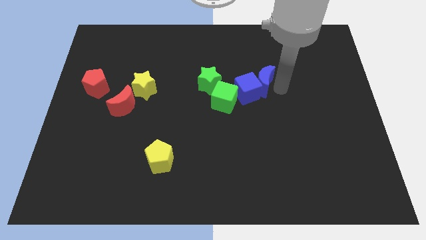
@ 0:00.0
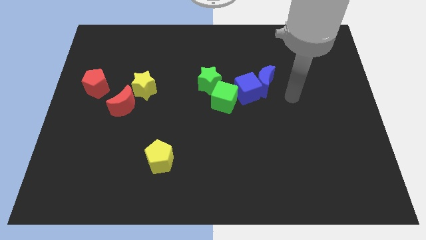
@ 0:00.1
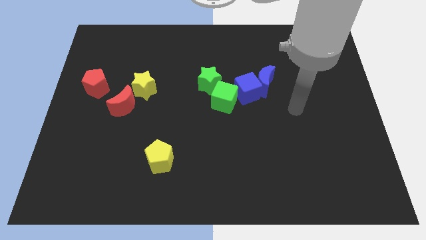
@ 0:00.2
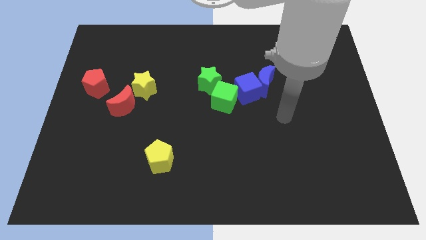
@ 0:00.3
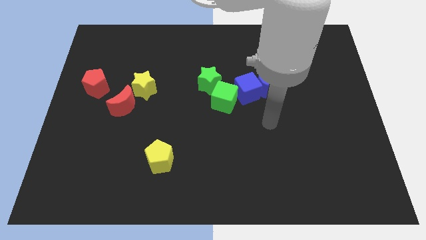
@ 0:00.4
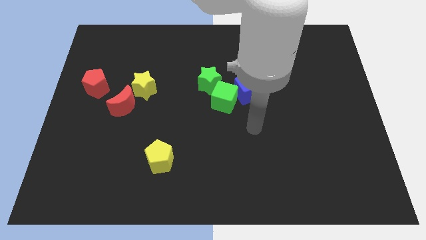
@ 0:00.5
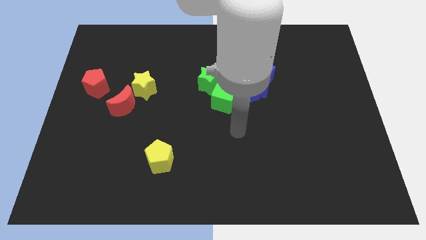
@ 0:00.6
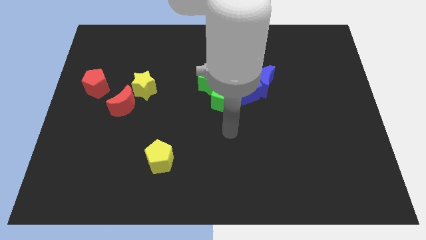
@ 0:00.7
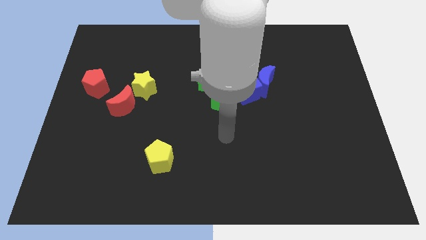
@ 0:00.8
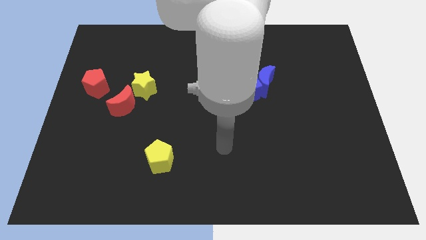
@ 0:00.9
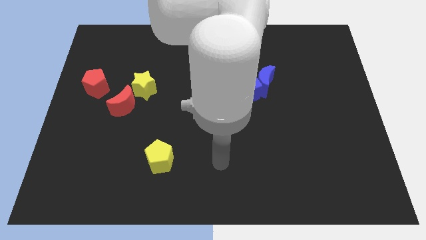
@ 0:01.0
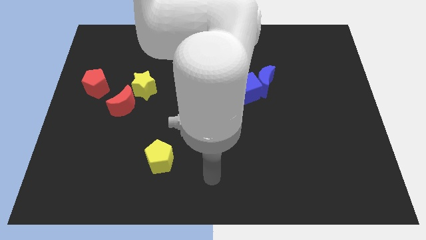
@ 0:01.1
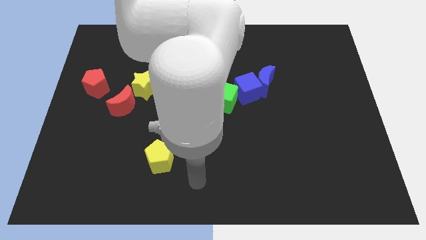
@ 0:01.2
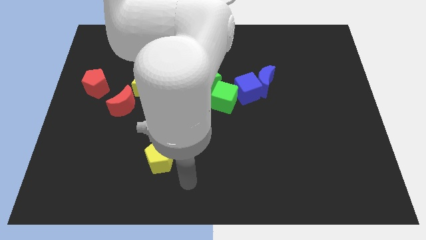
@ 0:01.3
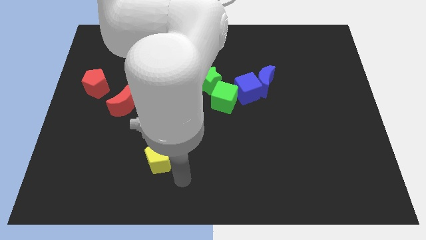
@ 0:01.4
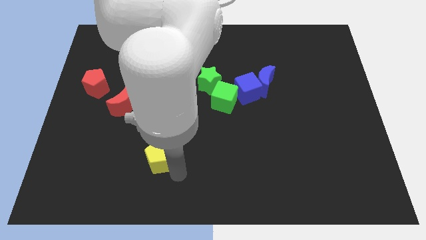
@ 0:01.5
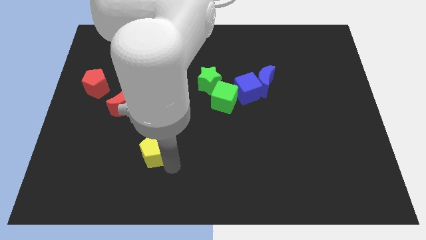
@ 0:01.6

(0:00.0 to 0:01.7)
move your arm away from the blue moon

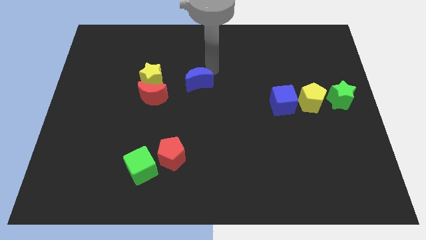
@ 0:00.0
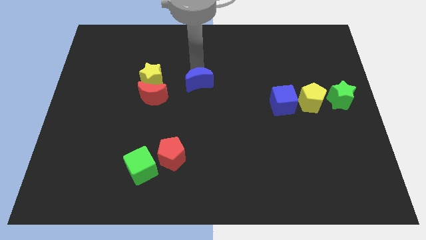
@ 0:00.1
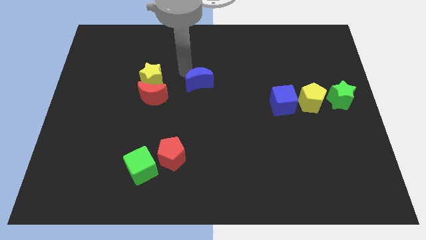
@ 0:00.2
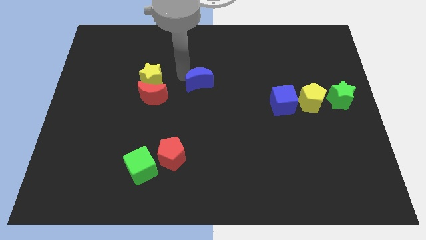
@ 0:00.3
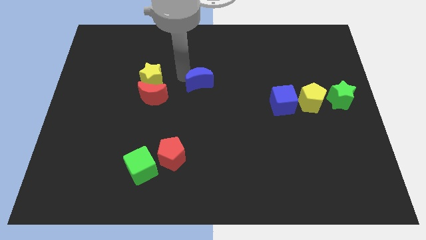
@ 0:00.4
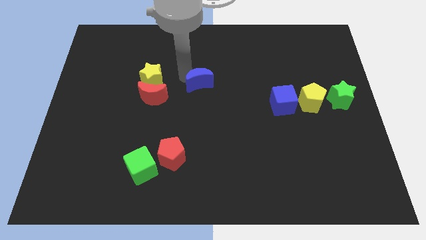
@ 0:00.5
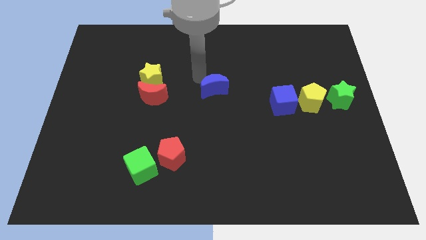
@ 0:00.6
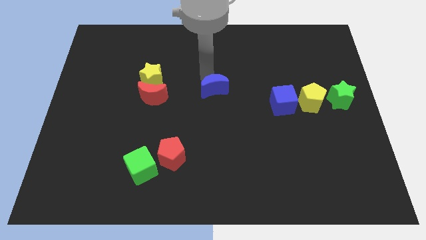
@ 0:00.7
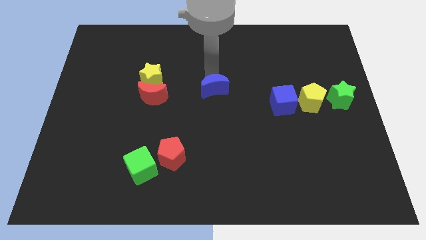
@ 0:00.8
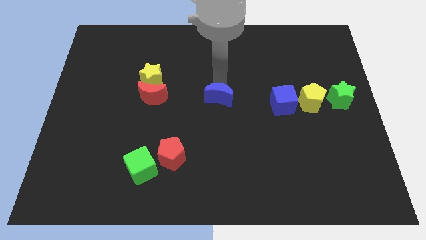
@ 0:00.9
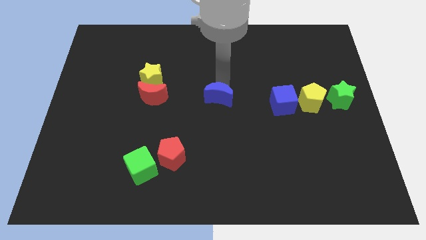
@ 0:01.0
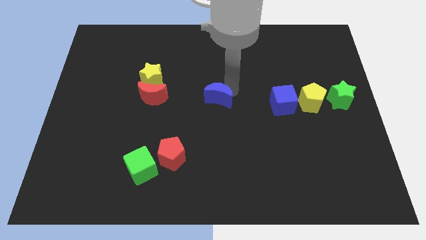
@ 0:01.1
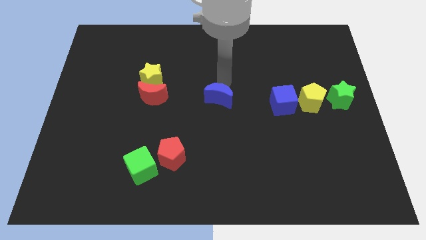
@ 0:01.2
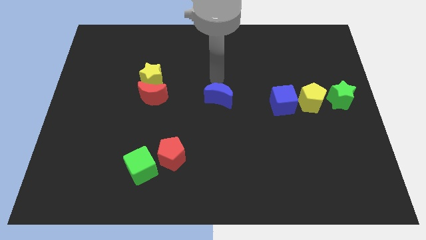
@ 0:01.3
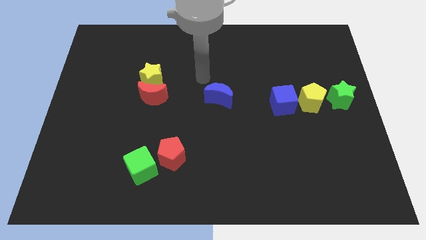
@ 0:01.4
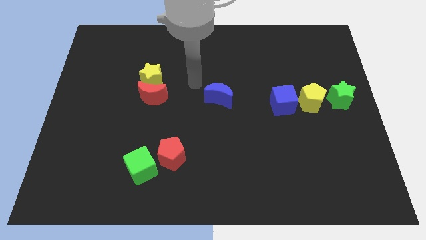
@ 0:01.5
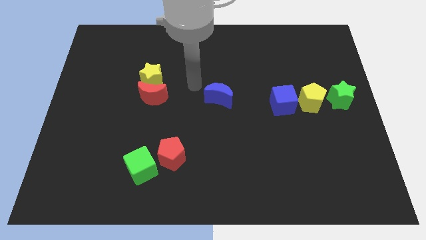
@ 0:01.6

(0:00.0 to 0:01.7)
place the blue crescent at center of the board

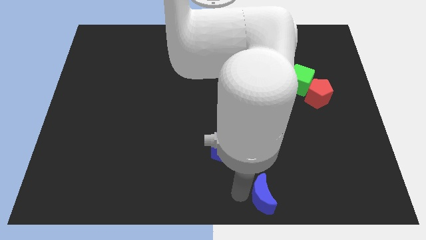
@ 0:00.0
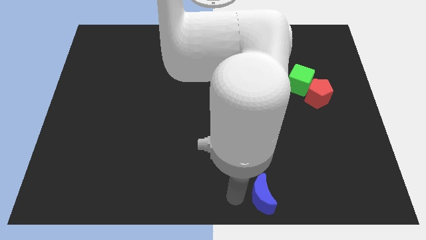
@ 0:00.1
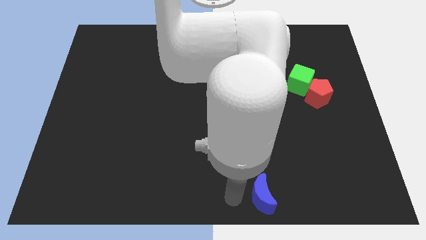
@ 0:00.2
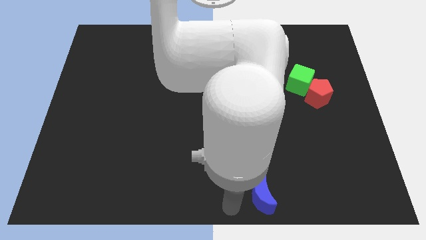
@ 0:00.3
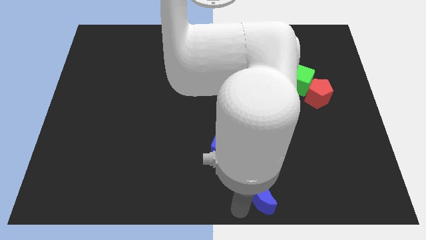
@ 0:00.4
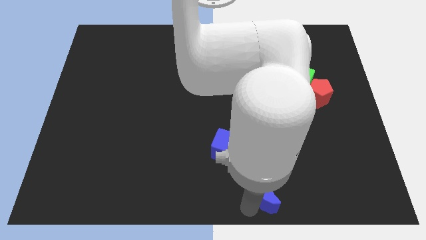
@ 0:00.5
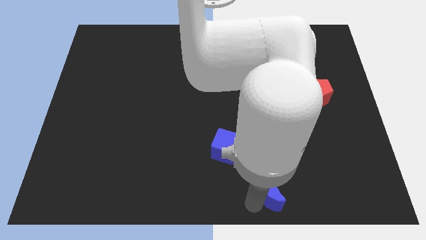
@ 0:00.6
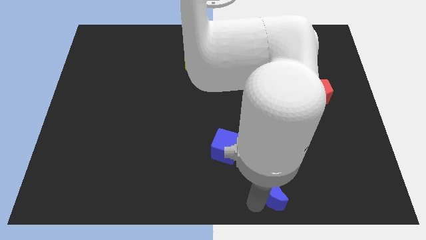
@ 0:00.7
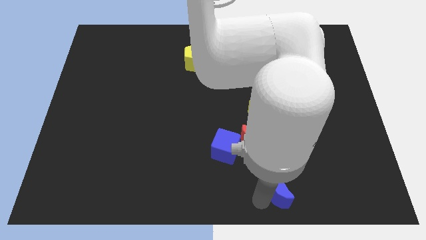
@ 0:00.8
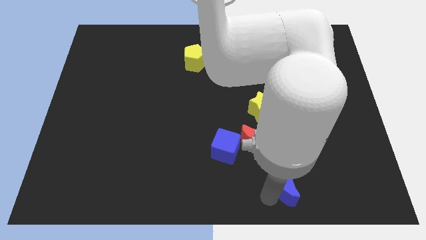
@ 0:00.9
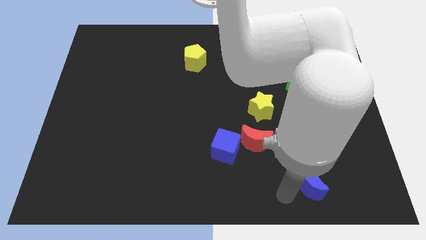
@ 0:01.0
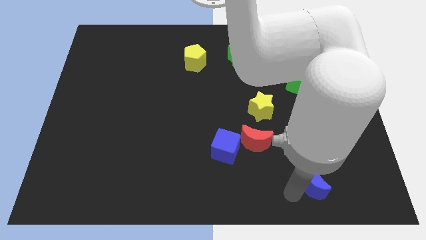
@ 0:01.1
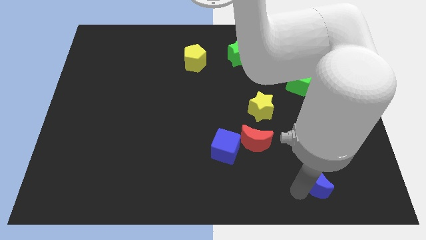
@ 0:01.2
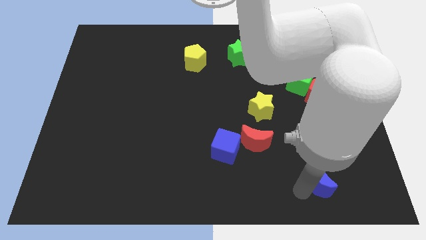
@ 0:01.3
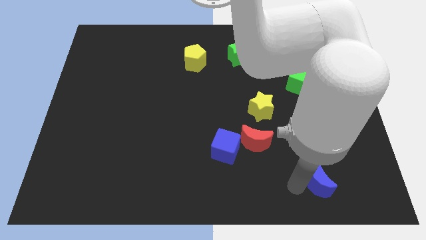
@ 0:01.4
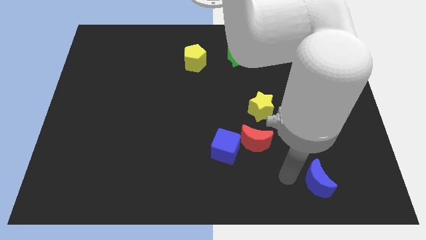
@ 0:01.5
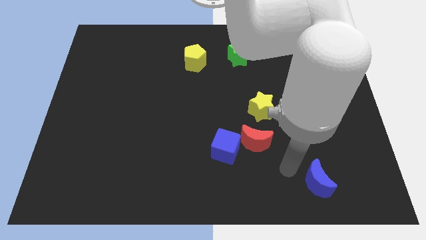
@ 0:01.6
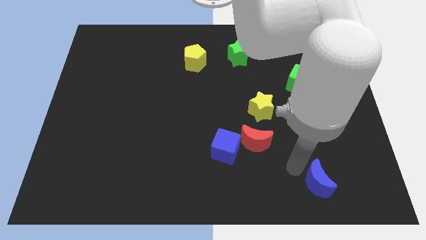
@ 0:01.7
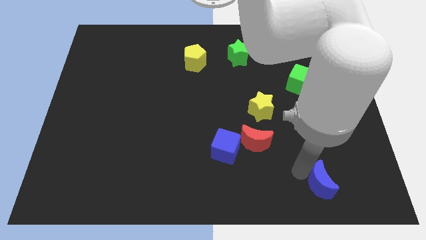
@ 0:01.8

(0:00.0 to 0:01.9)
put the blue moon vertically below the green cube

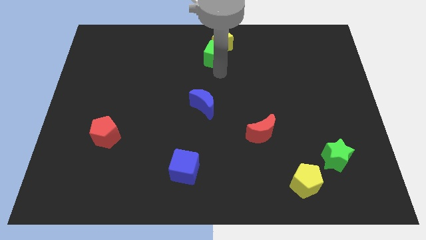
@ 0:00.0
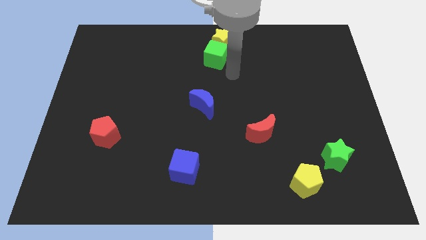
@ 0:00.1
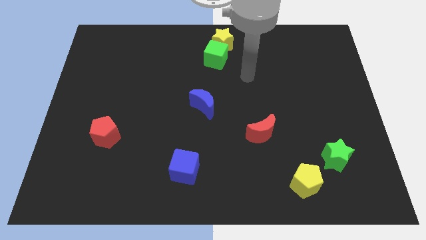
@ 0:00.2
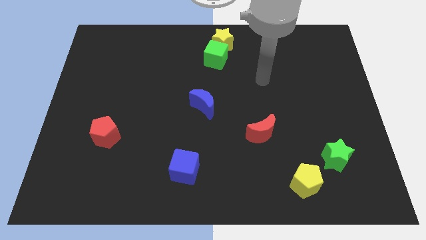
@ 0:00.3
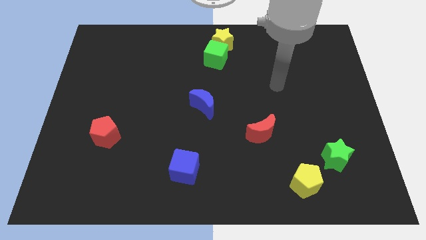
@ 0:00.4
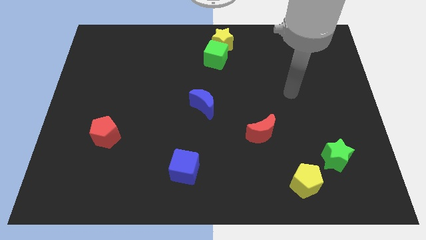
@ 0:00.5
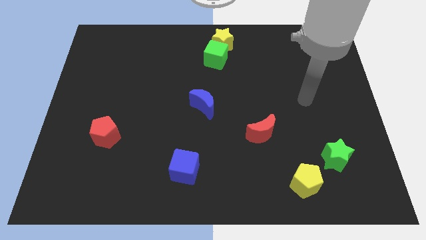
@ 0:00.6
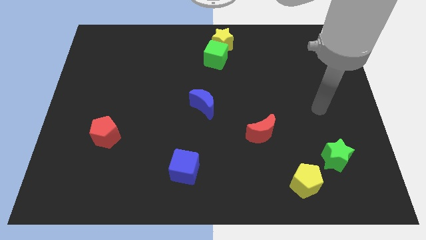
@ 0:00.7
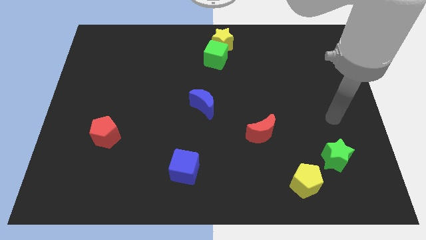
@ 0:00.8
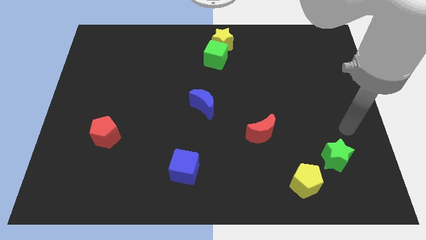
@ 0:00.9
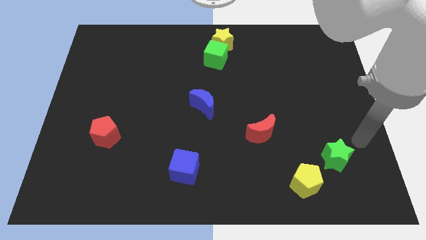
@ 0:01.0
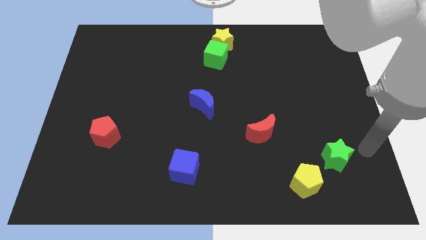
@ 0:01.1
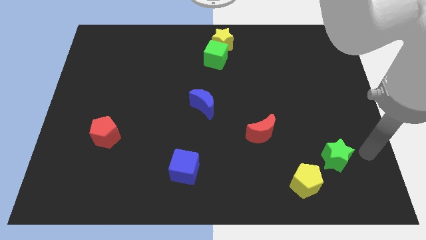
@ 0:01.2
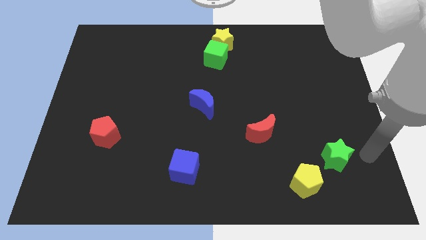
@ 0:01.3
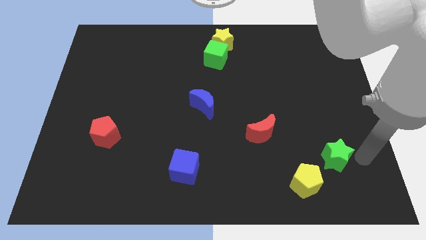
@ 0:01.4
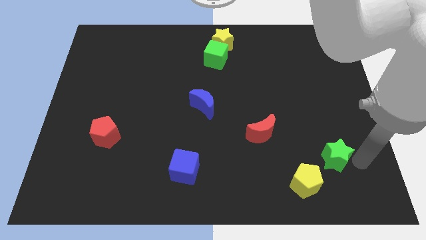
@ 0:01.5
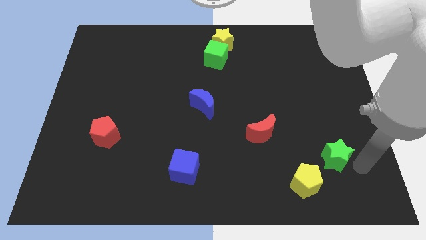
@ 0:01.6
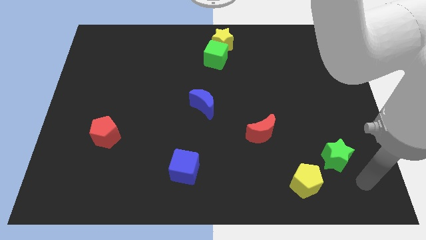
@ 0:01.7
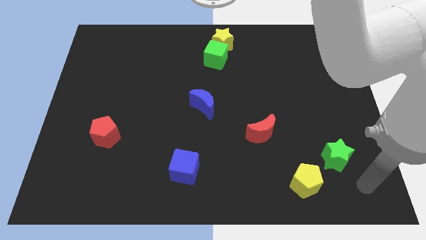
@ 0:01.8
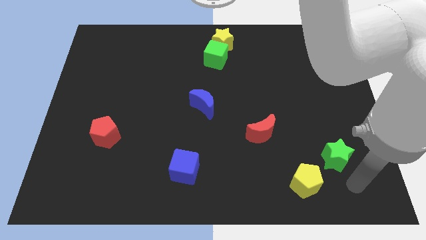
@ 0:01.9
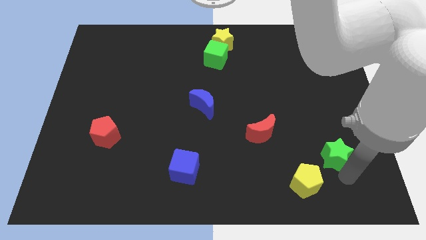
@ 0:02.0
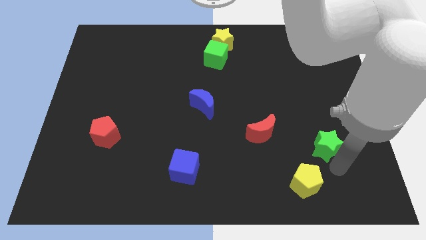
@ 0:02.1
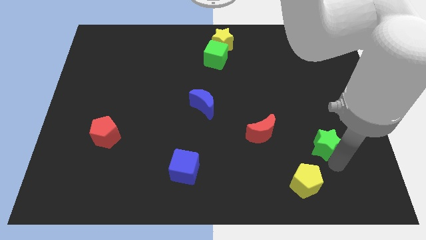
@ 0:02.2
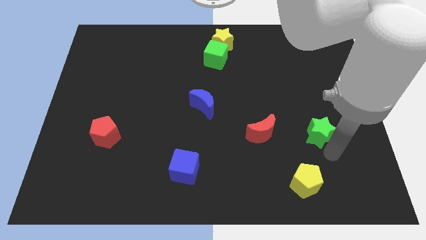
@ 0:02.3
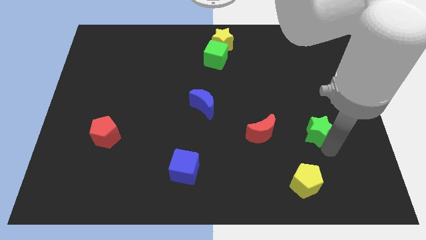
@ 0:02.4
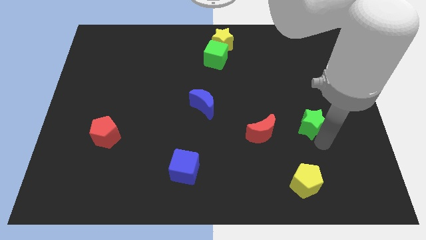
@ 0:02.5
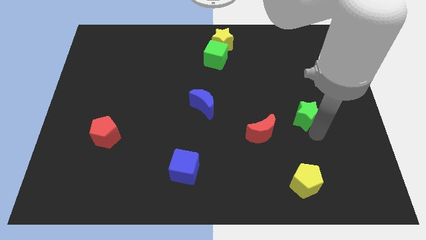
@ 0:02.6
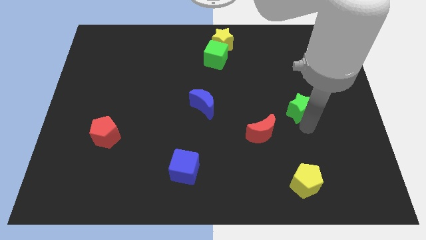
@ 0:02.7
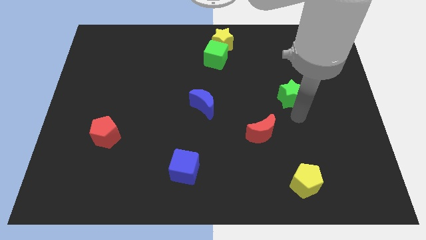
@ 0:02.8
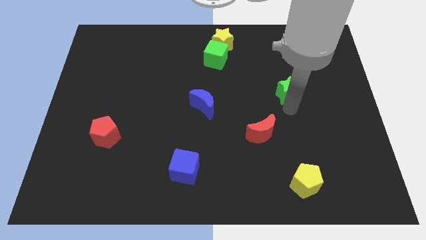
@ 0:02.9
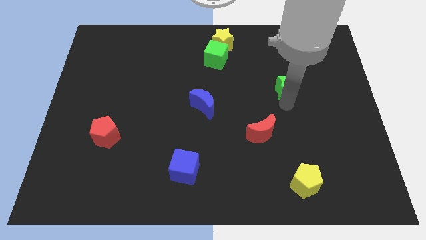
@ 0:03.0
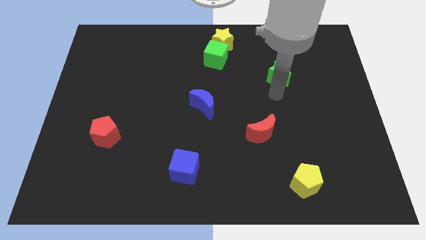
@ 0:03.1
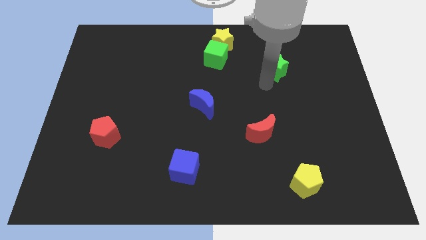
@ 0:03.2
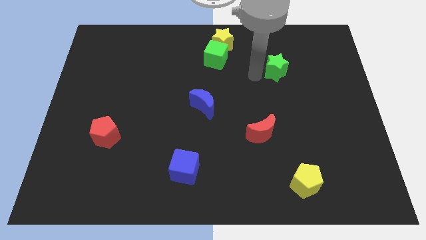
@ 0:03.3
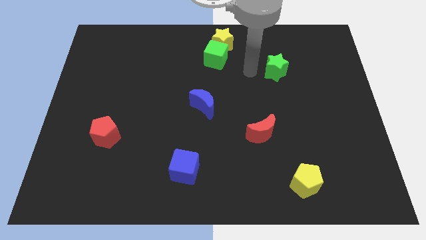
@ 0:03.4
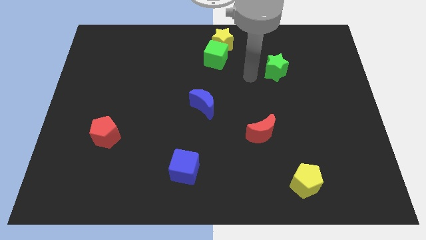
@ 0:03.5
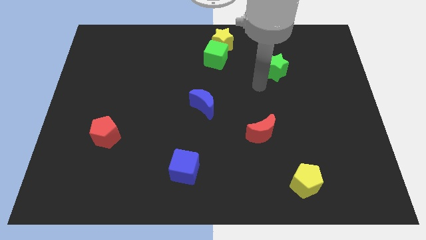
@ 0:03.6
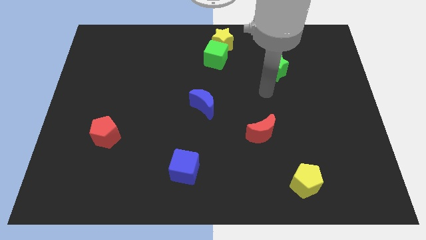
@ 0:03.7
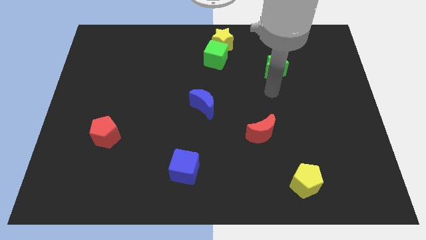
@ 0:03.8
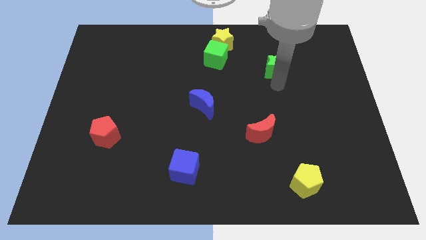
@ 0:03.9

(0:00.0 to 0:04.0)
move the green star parallel to green cube
